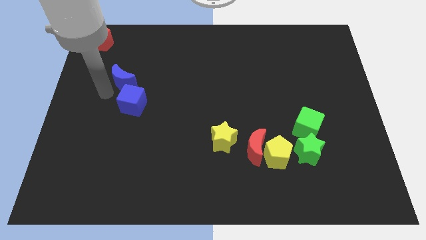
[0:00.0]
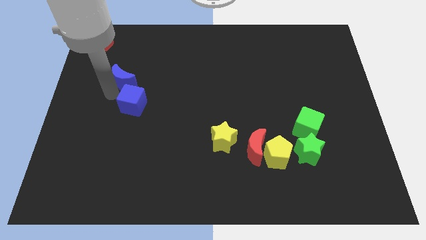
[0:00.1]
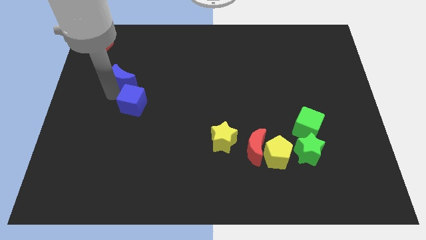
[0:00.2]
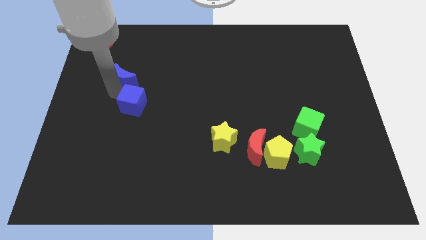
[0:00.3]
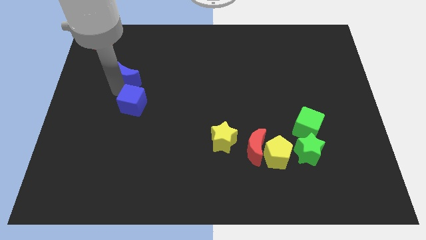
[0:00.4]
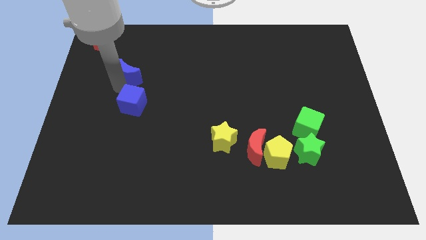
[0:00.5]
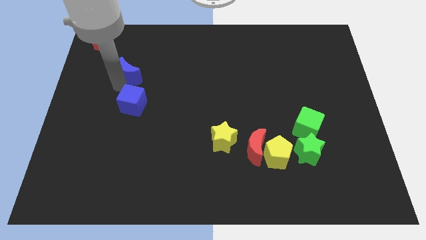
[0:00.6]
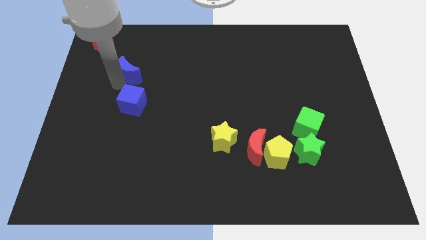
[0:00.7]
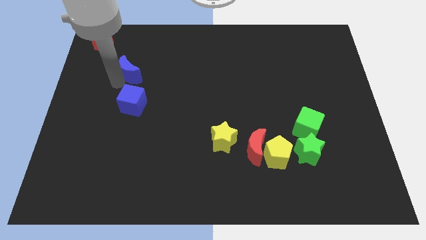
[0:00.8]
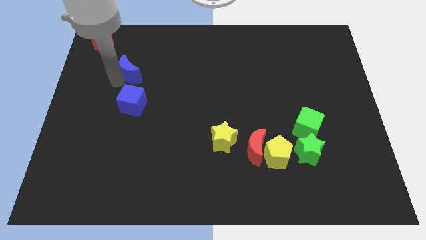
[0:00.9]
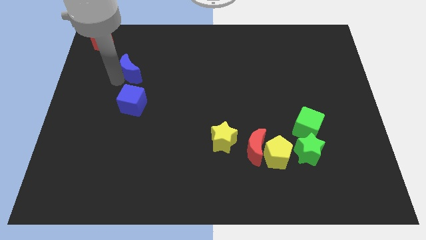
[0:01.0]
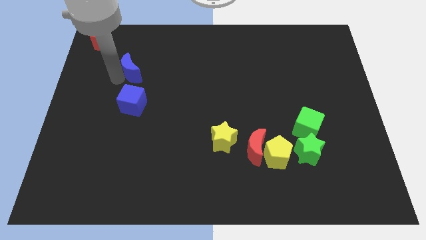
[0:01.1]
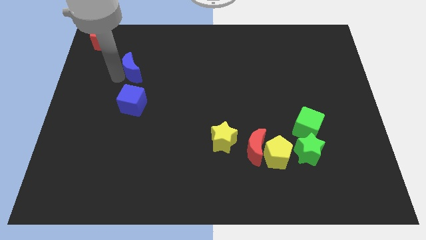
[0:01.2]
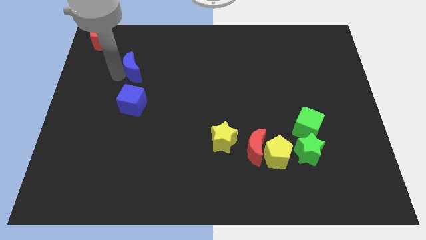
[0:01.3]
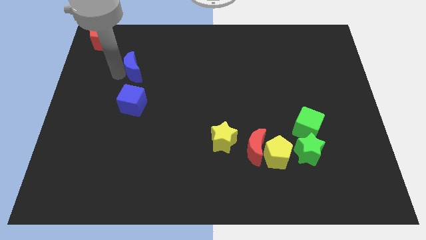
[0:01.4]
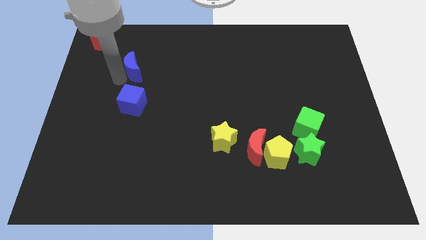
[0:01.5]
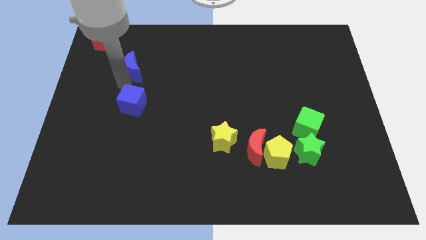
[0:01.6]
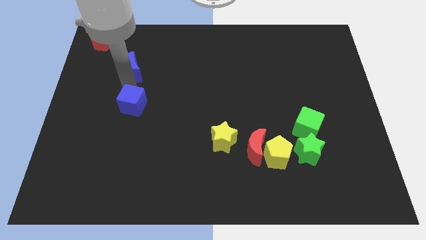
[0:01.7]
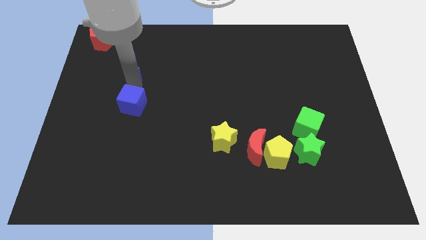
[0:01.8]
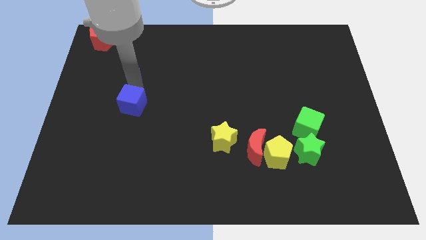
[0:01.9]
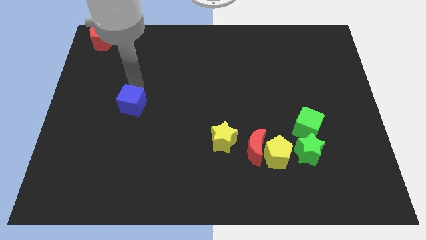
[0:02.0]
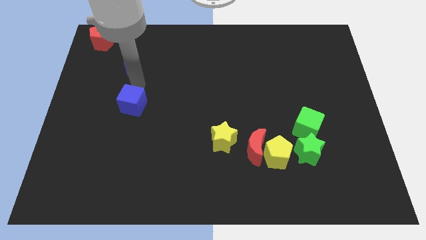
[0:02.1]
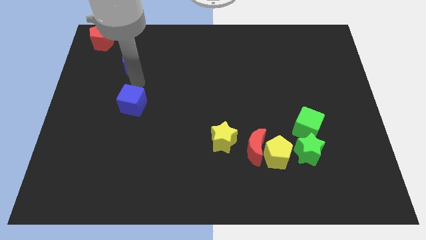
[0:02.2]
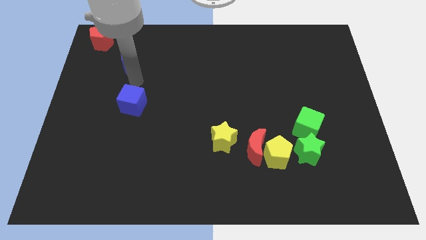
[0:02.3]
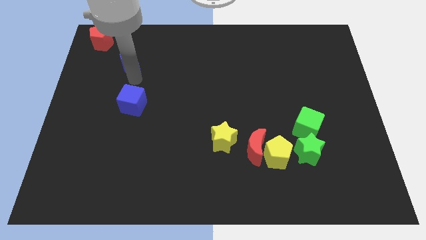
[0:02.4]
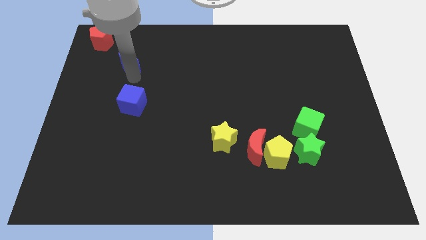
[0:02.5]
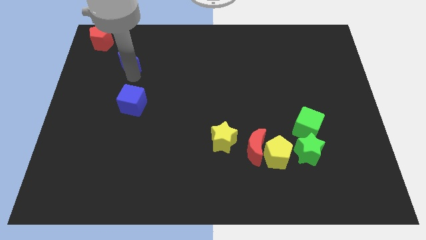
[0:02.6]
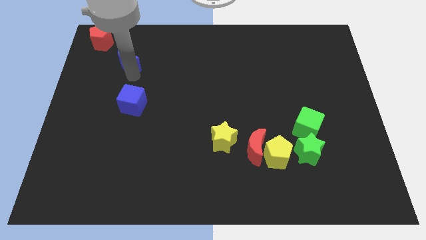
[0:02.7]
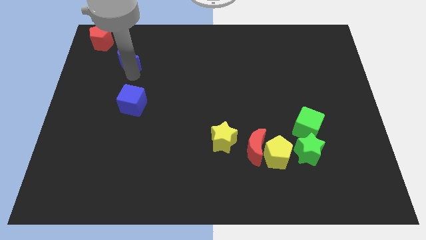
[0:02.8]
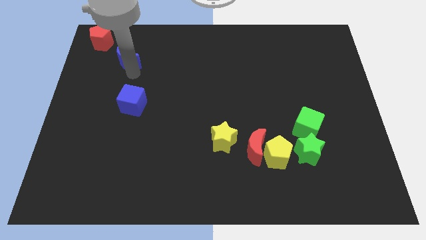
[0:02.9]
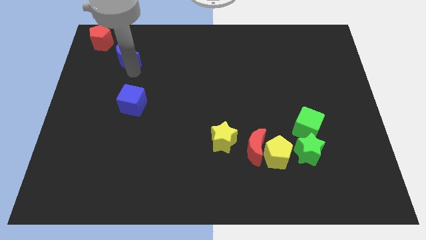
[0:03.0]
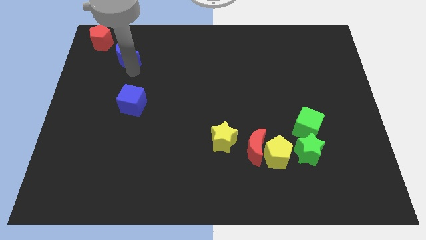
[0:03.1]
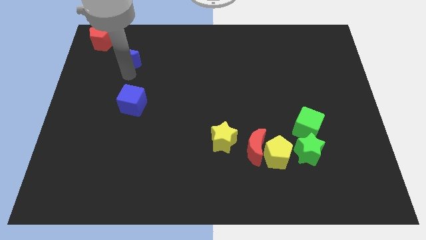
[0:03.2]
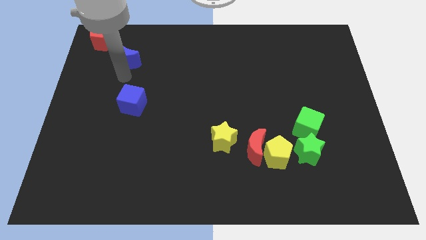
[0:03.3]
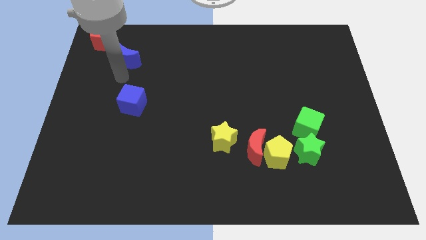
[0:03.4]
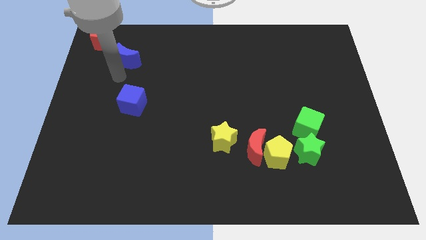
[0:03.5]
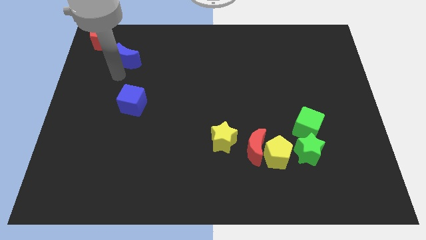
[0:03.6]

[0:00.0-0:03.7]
move the blue moon to the bottom right side of the red pentagon

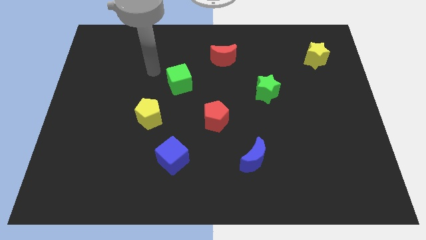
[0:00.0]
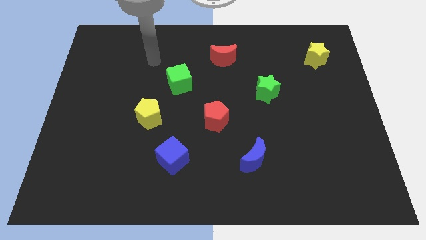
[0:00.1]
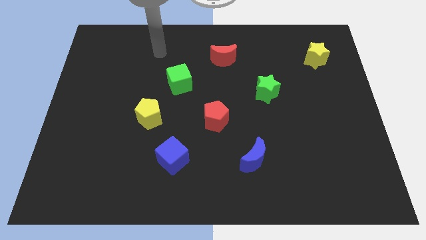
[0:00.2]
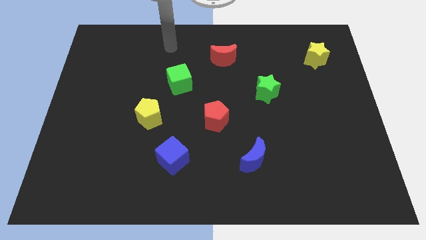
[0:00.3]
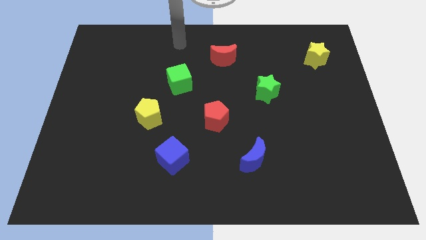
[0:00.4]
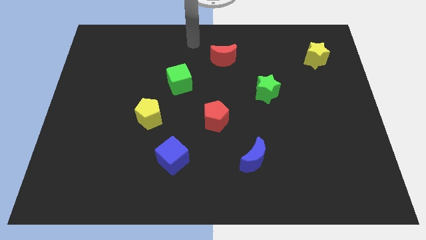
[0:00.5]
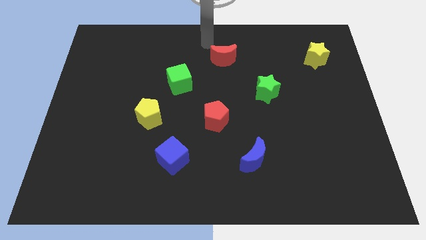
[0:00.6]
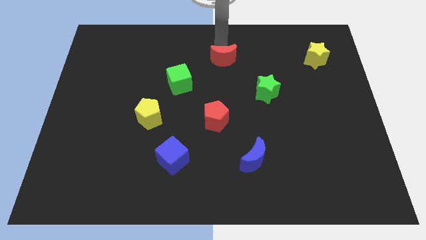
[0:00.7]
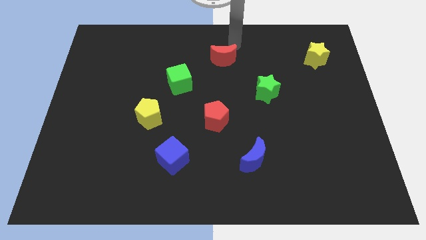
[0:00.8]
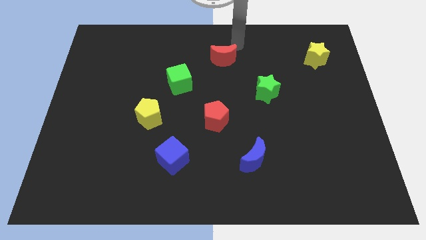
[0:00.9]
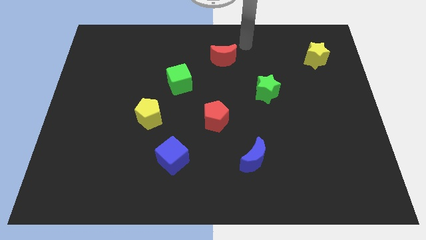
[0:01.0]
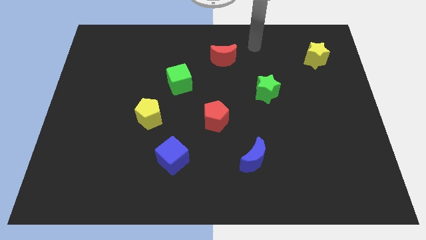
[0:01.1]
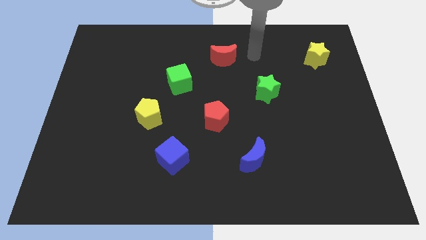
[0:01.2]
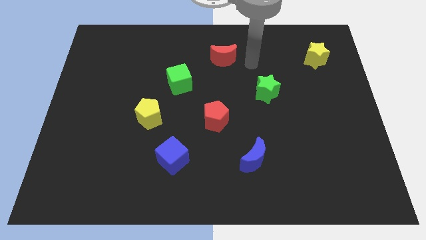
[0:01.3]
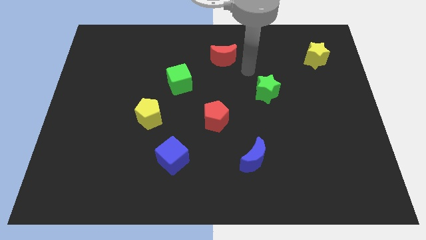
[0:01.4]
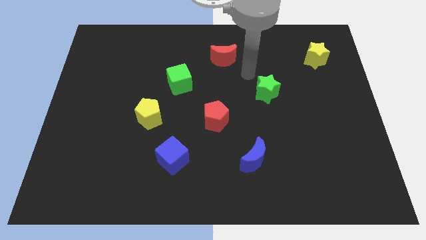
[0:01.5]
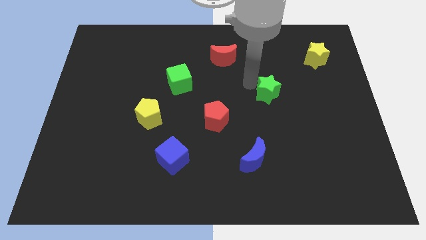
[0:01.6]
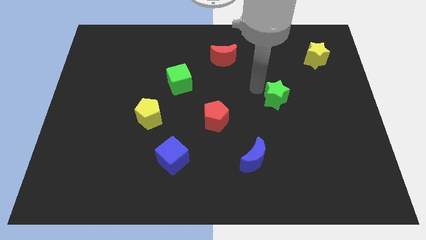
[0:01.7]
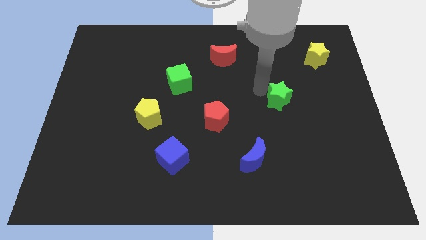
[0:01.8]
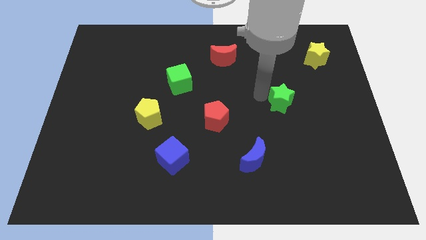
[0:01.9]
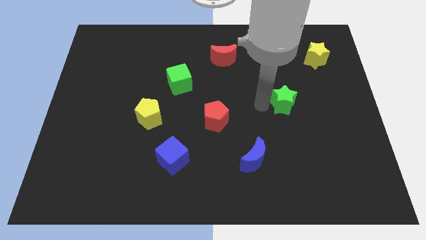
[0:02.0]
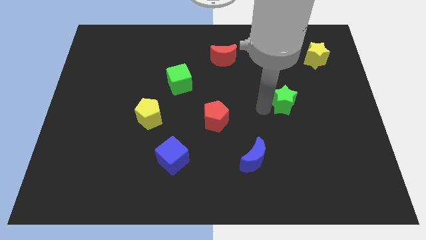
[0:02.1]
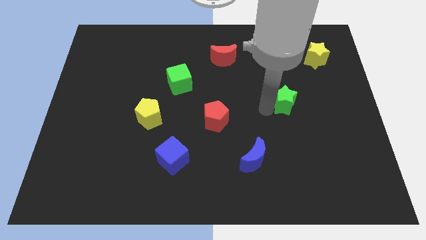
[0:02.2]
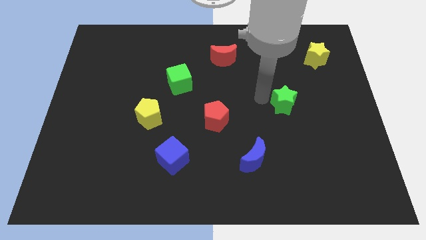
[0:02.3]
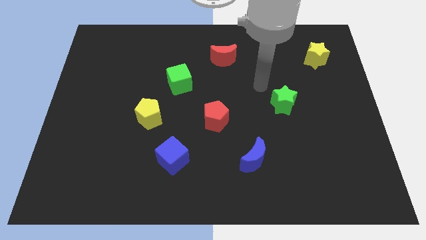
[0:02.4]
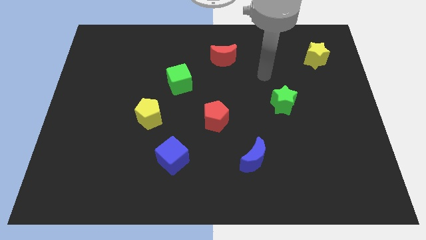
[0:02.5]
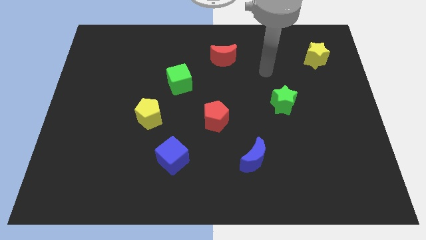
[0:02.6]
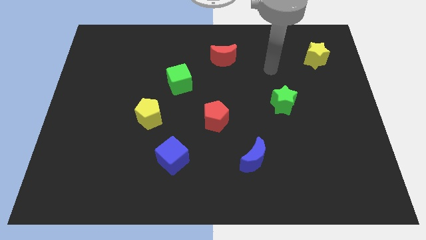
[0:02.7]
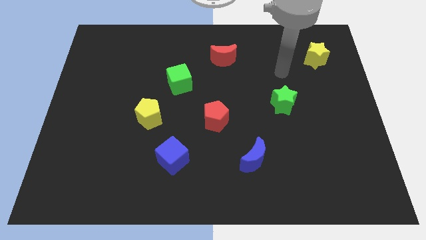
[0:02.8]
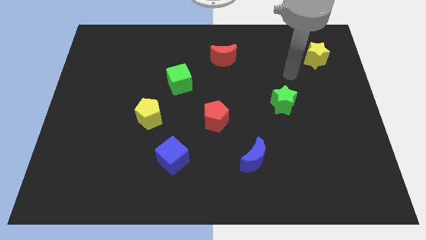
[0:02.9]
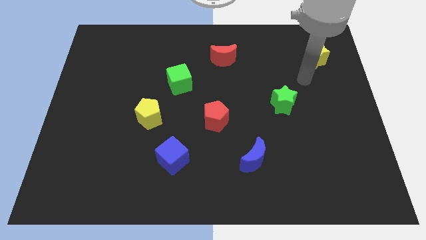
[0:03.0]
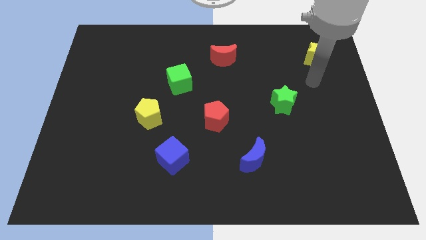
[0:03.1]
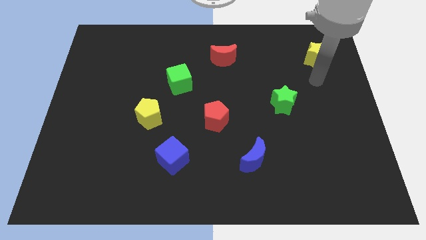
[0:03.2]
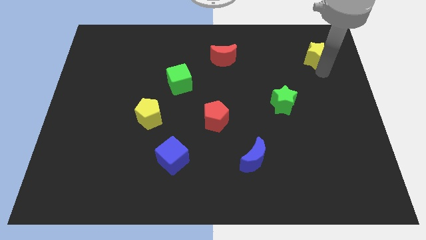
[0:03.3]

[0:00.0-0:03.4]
push the green star in between the yellow star and the blue moon

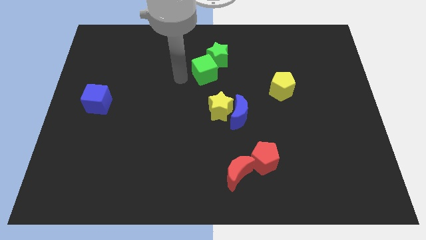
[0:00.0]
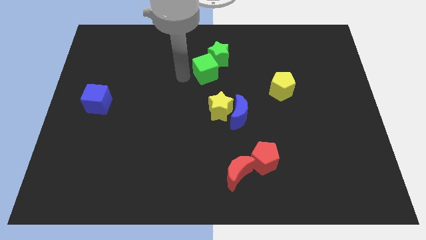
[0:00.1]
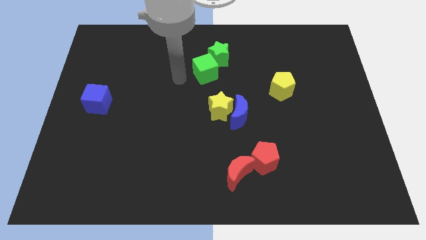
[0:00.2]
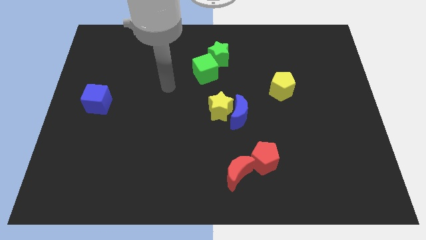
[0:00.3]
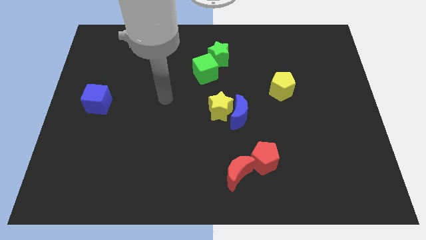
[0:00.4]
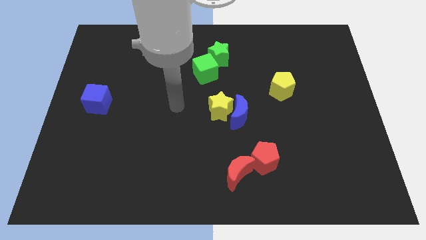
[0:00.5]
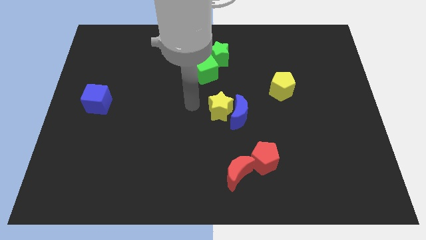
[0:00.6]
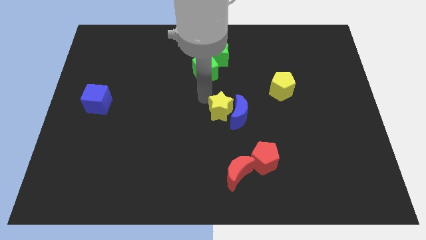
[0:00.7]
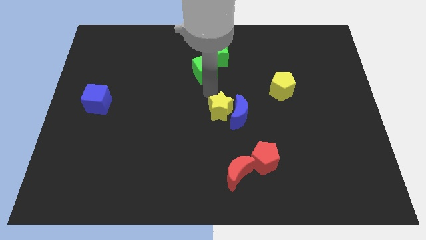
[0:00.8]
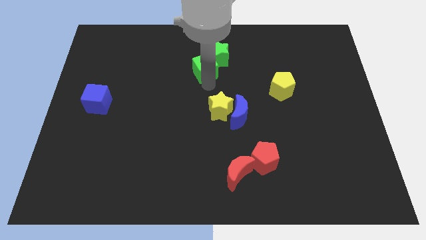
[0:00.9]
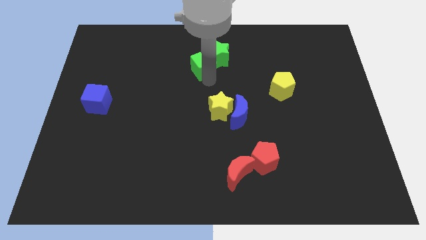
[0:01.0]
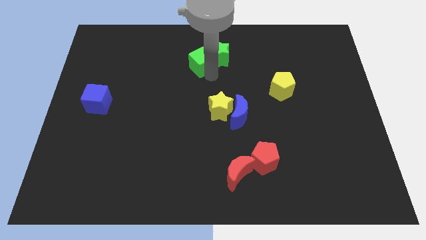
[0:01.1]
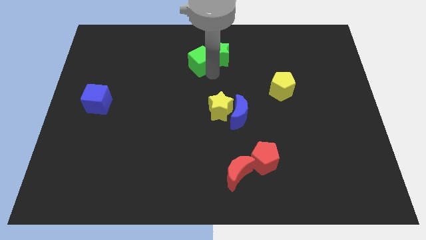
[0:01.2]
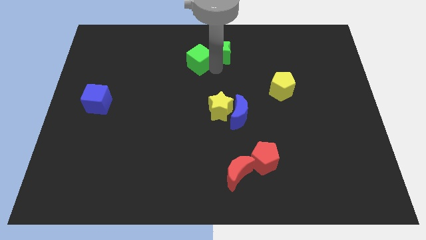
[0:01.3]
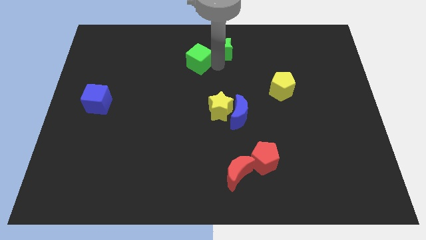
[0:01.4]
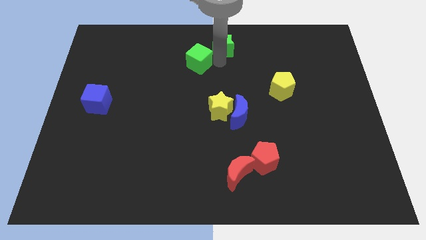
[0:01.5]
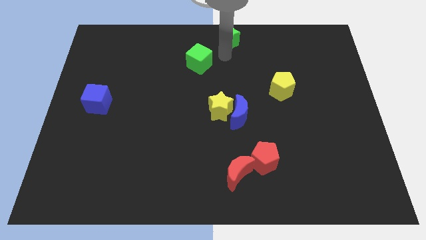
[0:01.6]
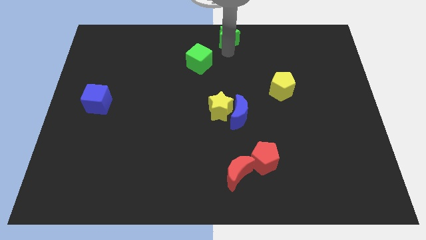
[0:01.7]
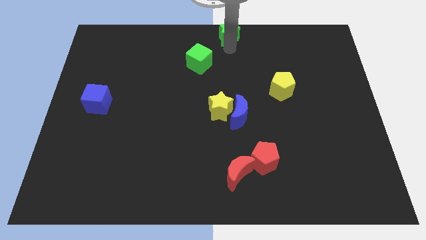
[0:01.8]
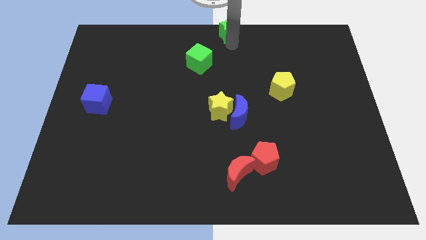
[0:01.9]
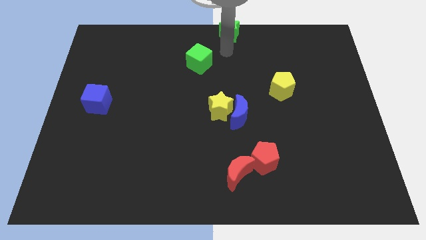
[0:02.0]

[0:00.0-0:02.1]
move green star middle of the board
